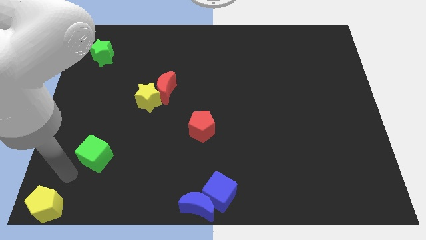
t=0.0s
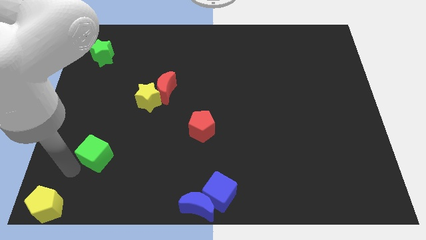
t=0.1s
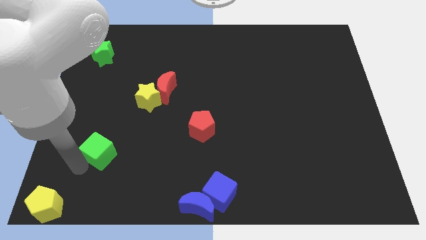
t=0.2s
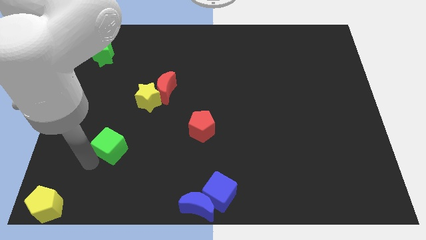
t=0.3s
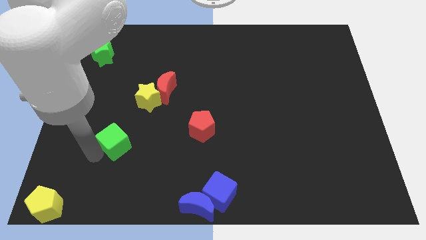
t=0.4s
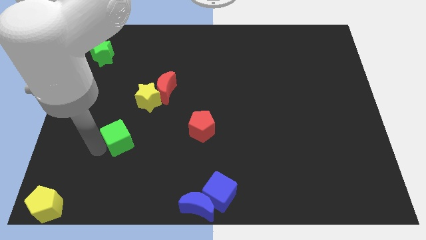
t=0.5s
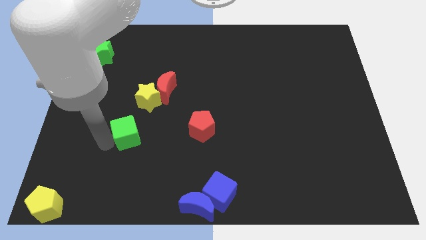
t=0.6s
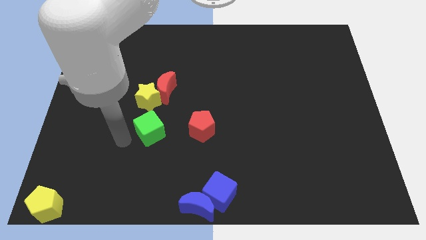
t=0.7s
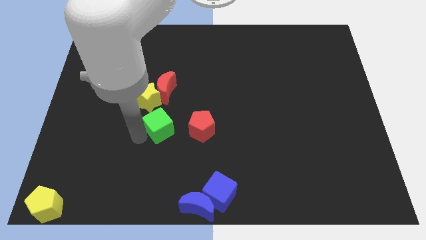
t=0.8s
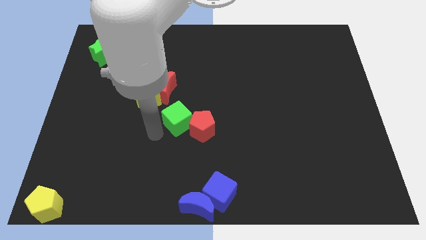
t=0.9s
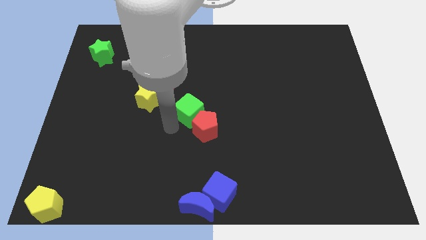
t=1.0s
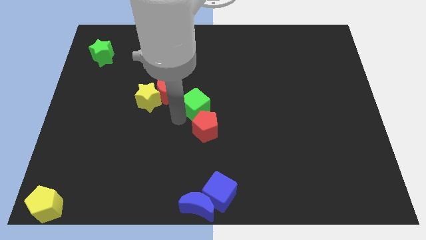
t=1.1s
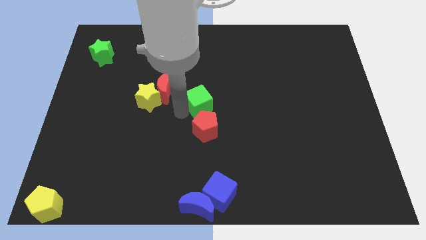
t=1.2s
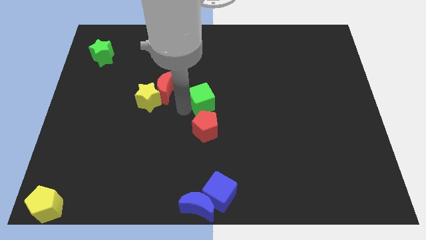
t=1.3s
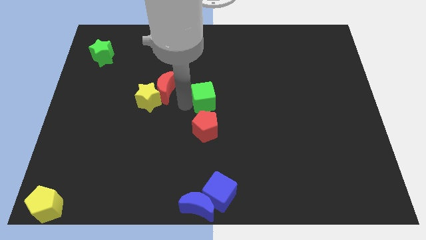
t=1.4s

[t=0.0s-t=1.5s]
move the green cube to the center of the board

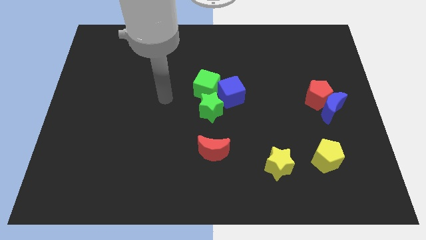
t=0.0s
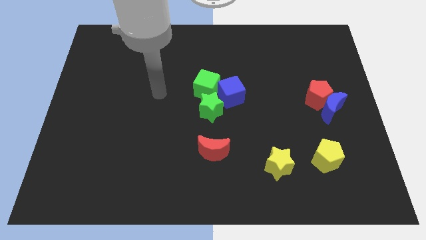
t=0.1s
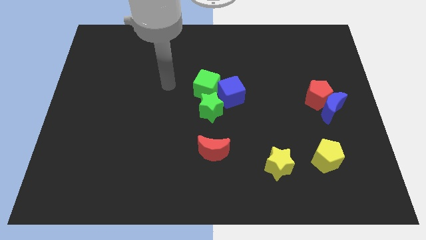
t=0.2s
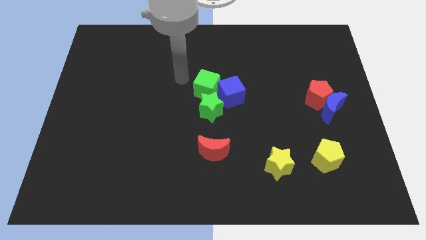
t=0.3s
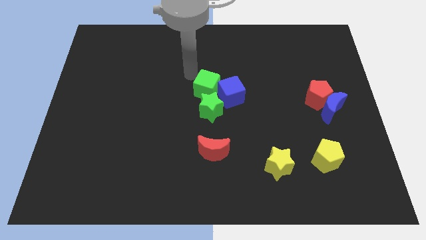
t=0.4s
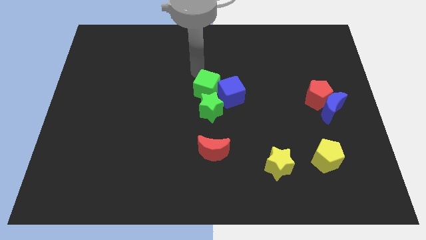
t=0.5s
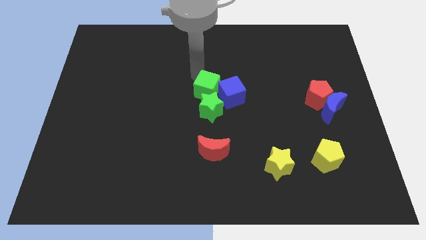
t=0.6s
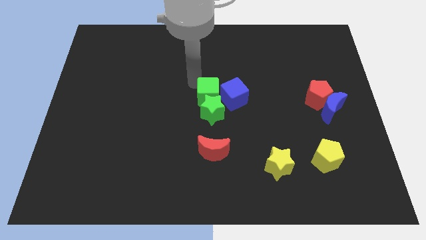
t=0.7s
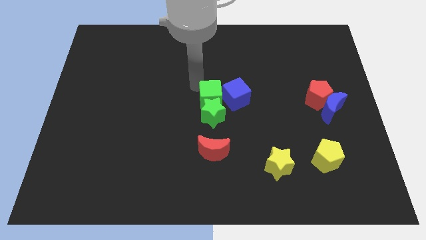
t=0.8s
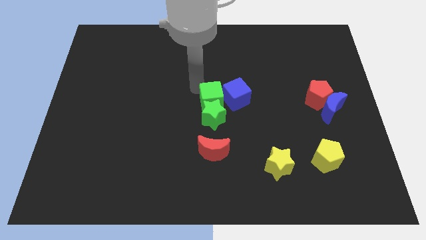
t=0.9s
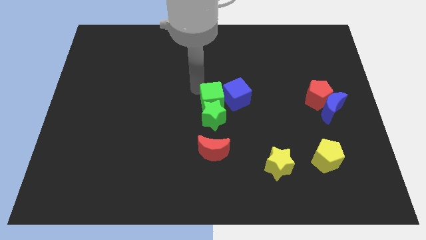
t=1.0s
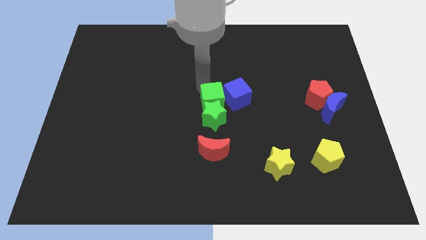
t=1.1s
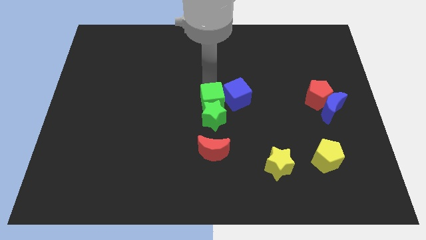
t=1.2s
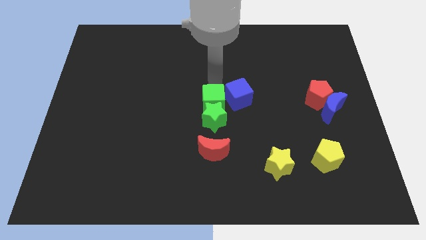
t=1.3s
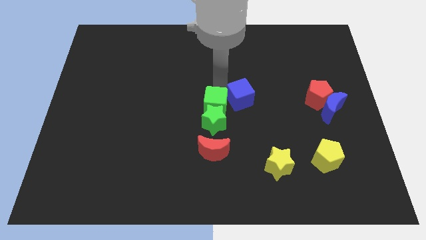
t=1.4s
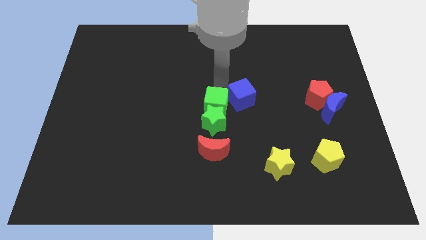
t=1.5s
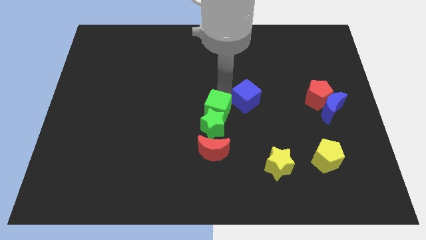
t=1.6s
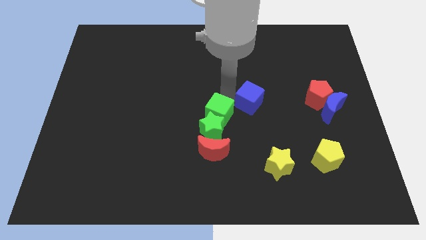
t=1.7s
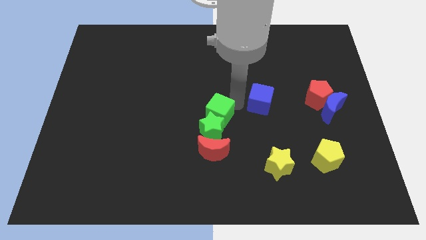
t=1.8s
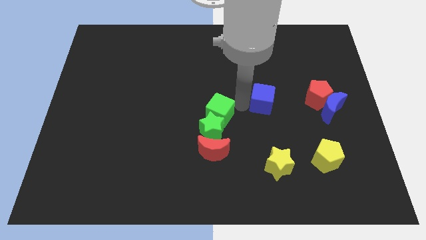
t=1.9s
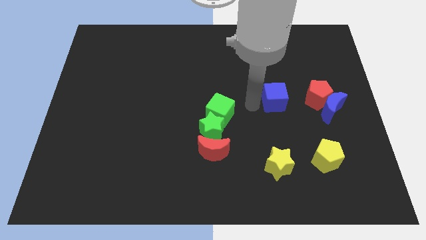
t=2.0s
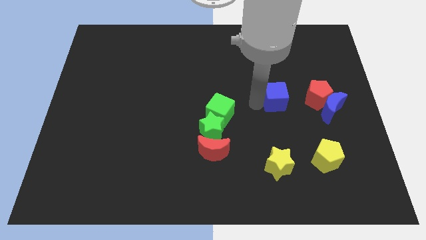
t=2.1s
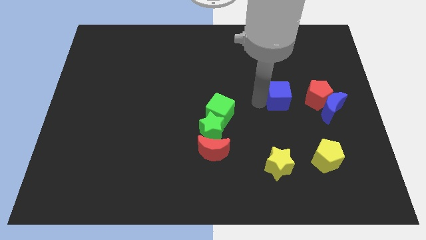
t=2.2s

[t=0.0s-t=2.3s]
separate the blue cube and the green blocks

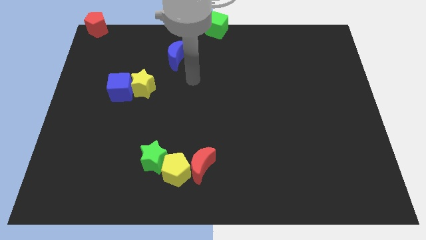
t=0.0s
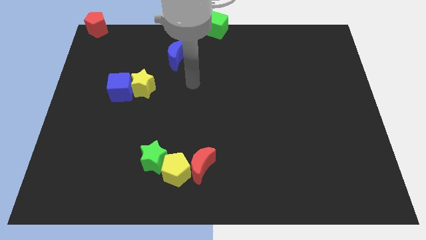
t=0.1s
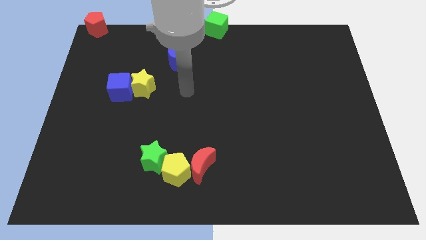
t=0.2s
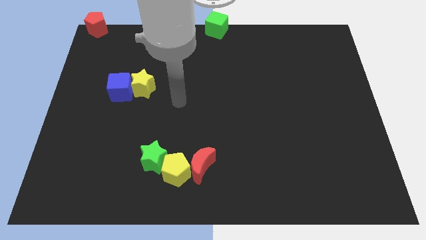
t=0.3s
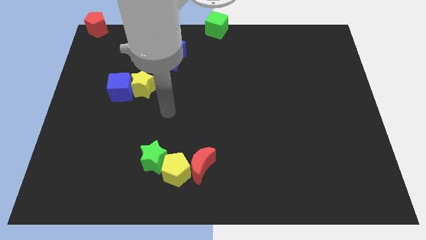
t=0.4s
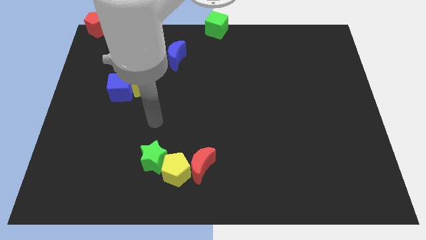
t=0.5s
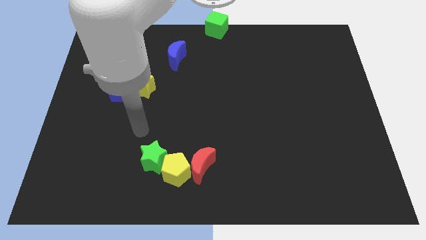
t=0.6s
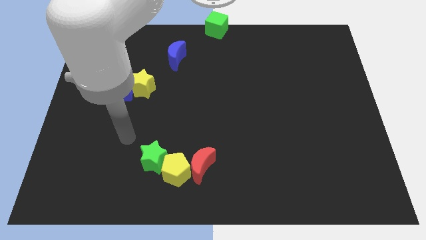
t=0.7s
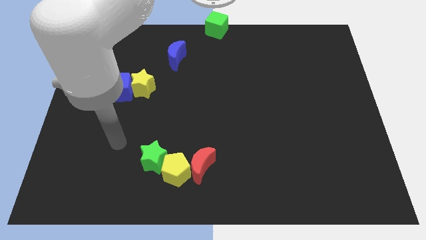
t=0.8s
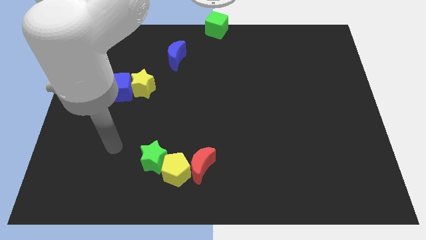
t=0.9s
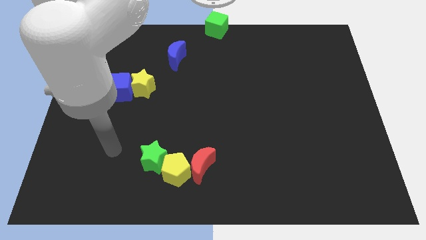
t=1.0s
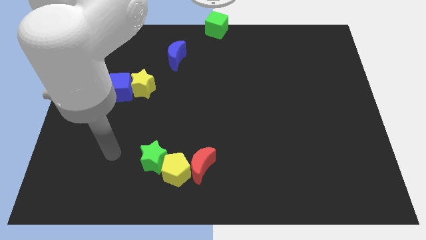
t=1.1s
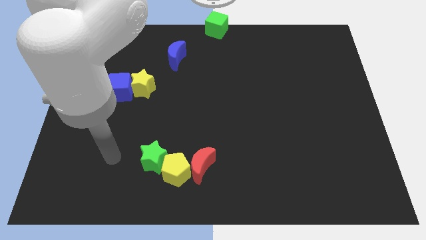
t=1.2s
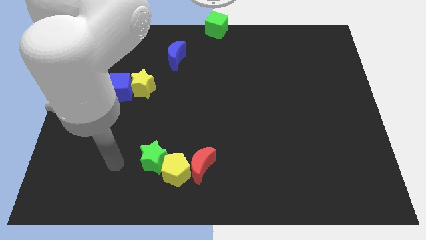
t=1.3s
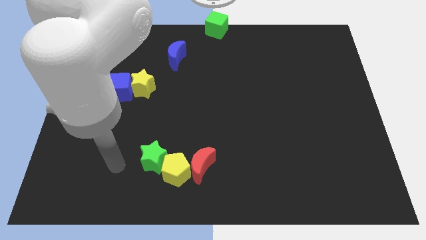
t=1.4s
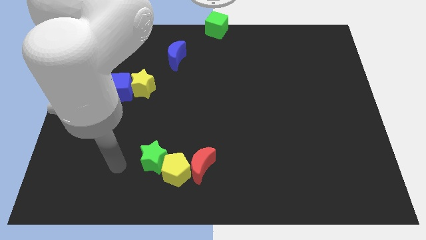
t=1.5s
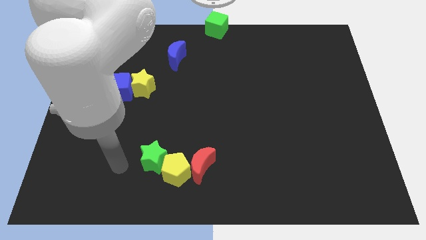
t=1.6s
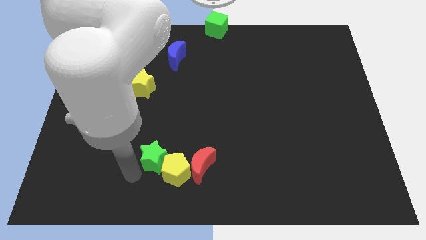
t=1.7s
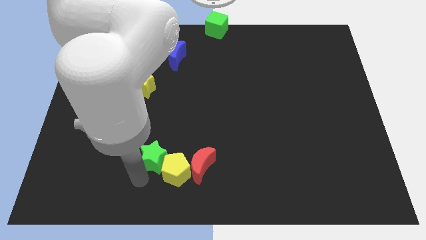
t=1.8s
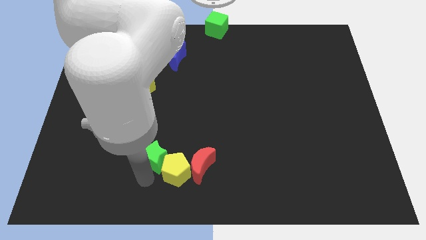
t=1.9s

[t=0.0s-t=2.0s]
move your arm to the bottom of green star

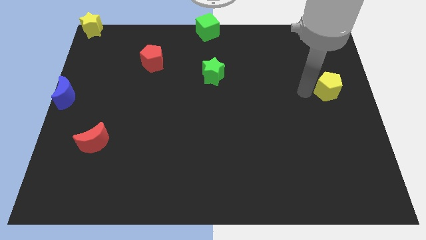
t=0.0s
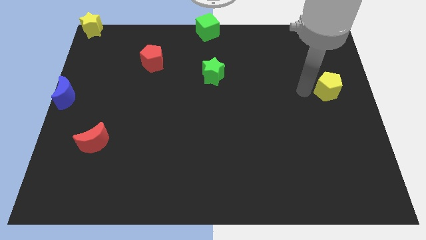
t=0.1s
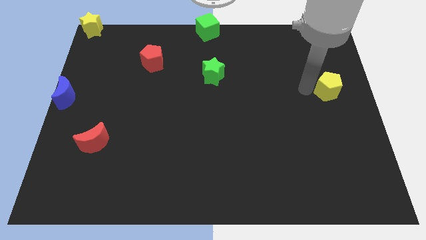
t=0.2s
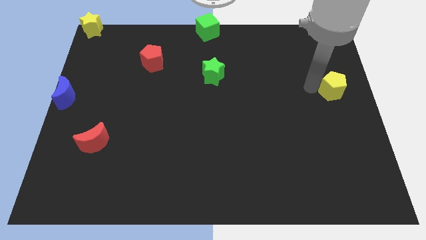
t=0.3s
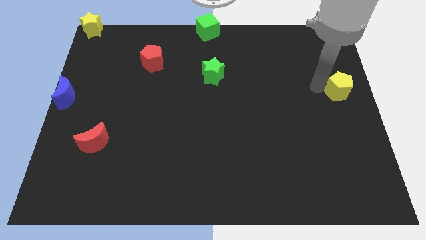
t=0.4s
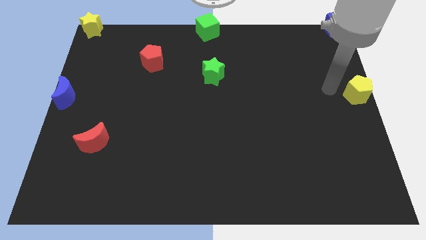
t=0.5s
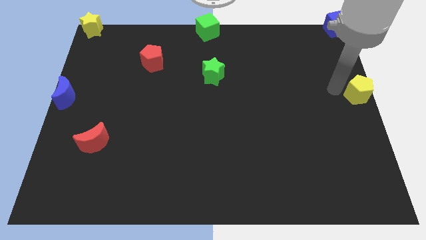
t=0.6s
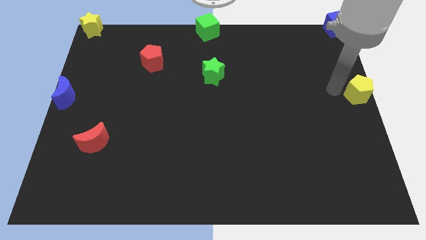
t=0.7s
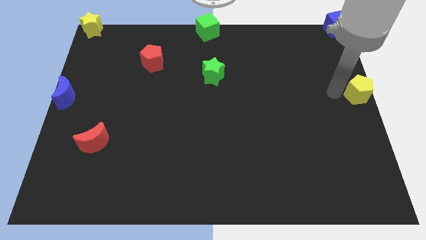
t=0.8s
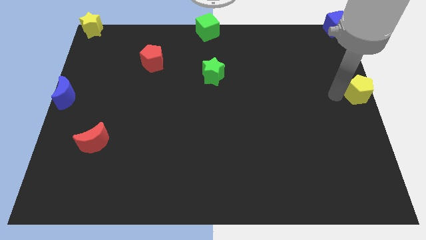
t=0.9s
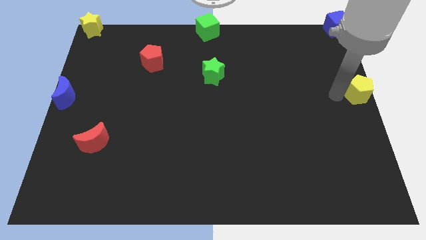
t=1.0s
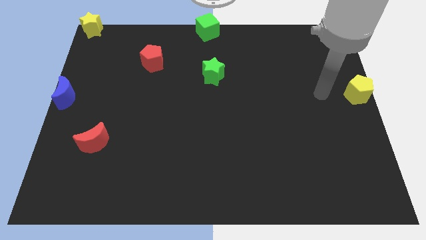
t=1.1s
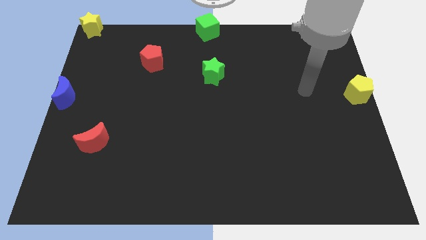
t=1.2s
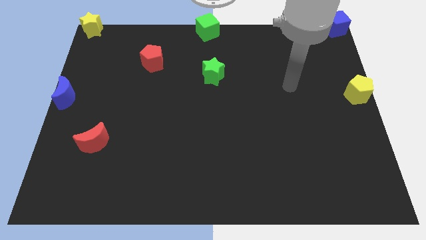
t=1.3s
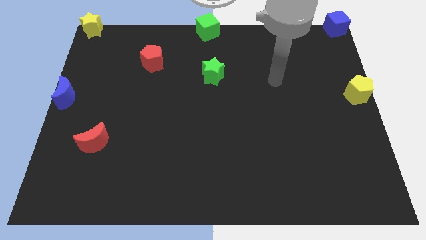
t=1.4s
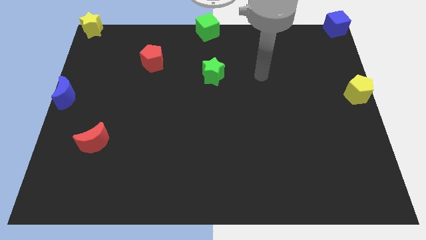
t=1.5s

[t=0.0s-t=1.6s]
move yellow pentagon to the right center of the board

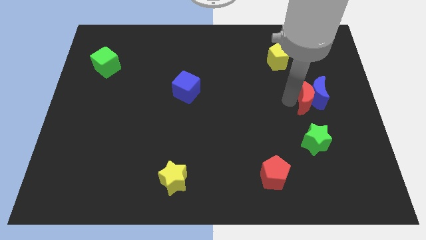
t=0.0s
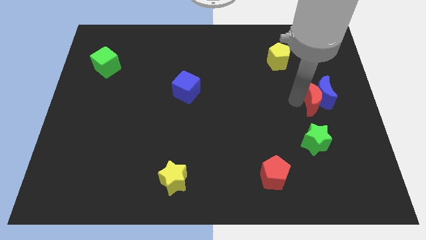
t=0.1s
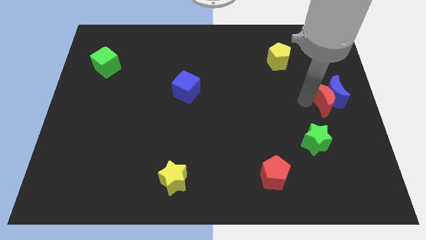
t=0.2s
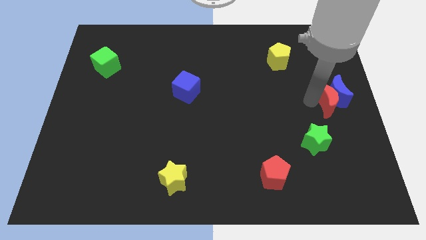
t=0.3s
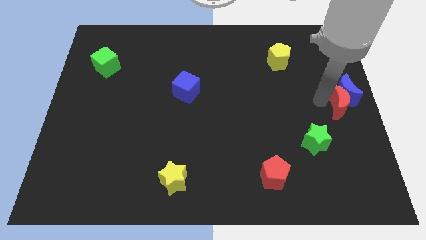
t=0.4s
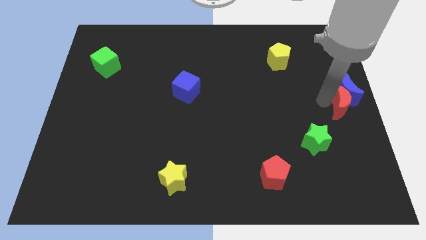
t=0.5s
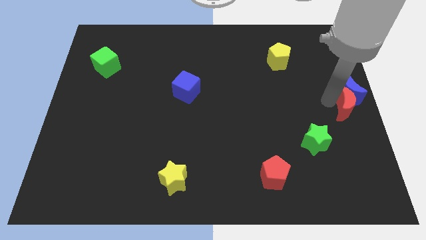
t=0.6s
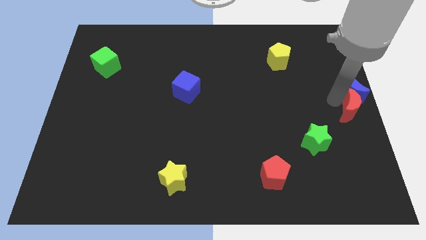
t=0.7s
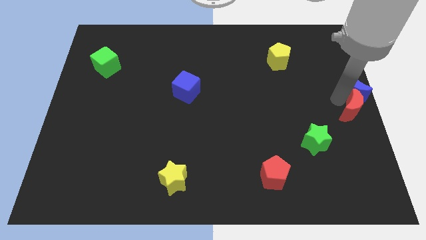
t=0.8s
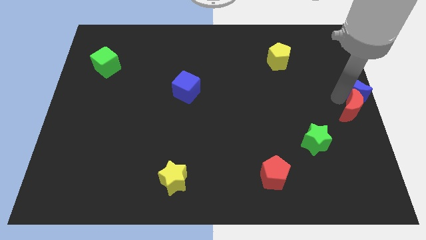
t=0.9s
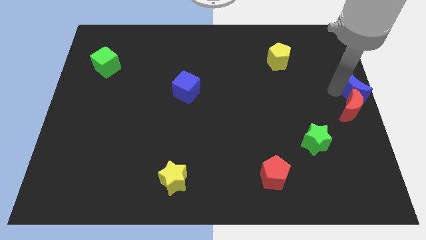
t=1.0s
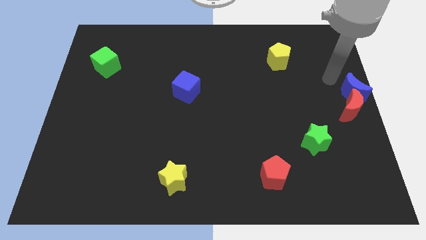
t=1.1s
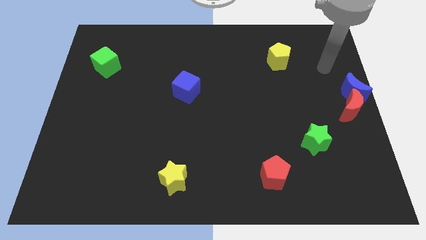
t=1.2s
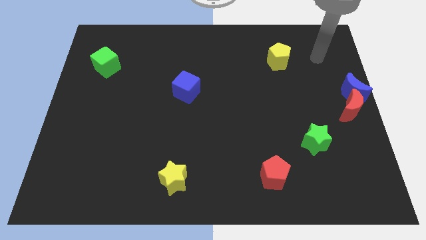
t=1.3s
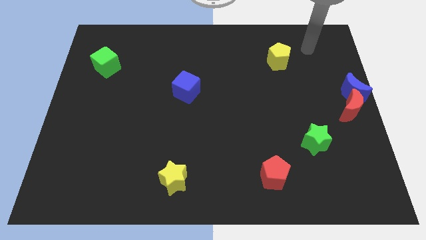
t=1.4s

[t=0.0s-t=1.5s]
push the blue moon with the red moon to the right center of the board
